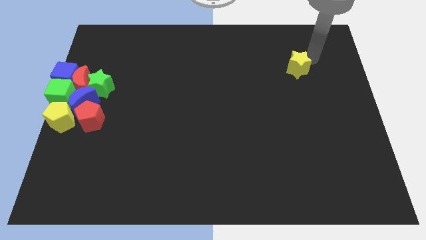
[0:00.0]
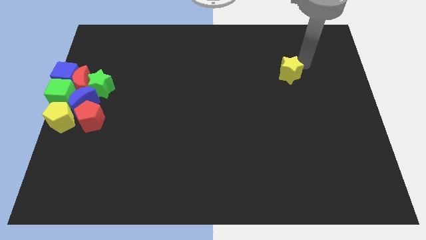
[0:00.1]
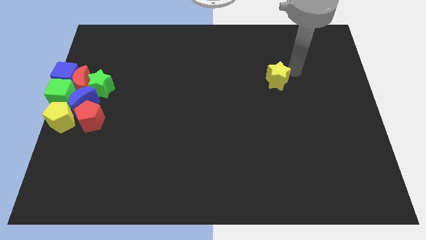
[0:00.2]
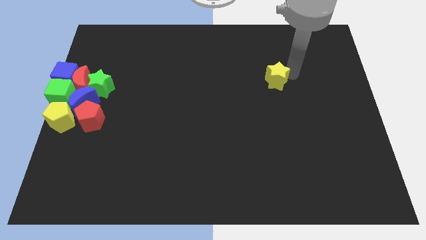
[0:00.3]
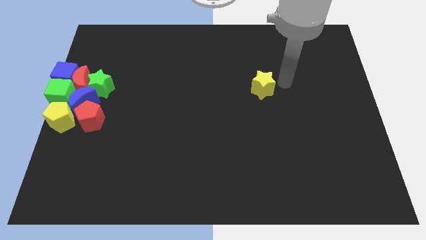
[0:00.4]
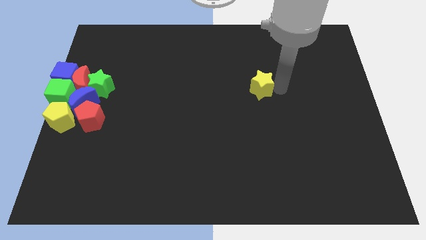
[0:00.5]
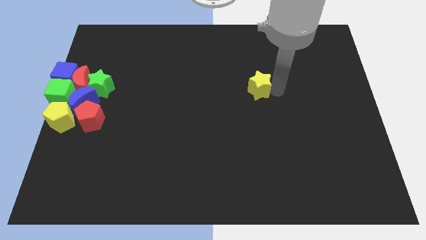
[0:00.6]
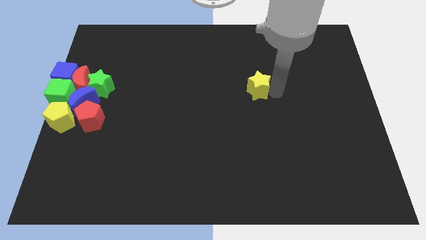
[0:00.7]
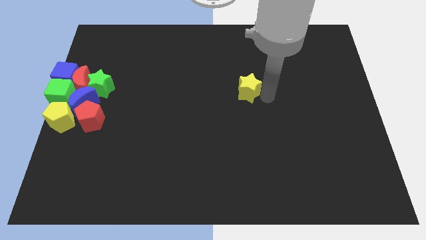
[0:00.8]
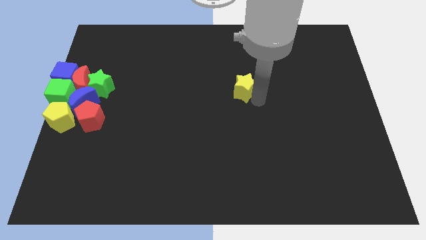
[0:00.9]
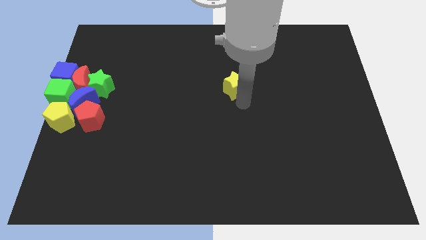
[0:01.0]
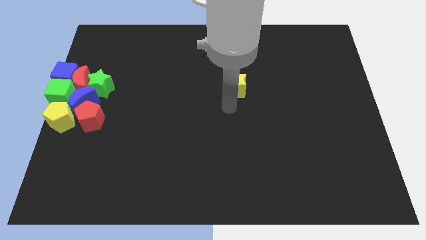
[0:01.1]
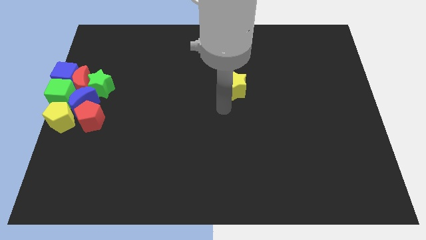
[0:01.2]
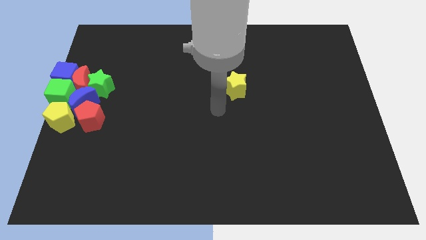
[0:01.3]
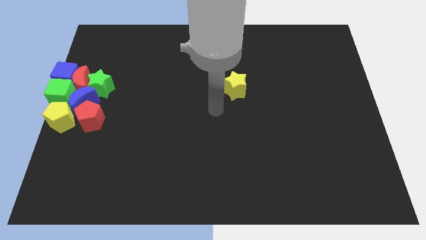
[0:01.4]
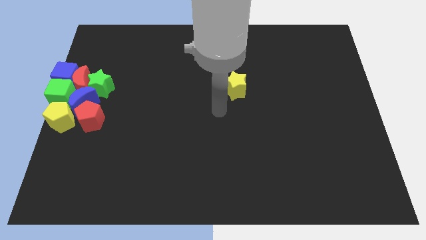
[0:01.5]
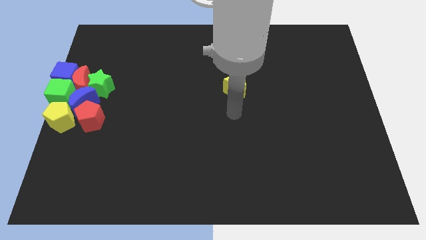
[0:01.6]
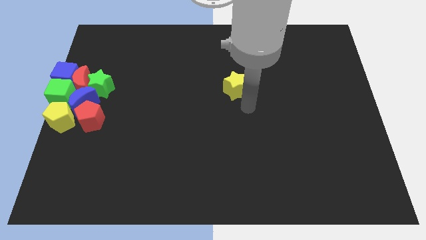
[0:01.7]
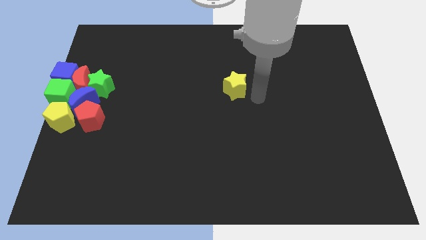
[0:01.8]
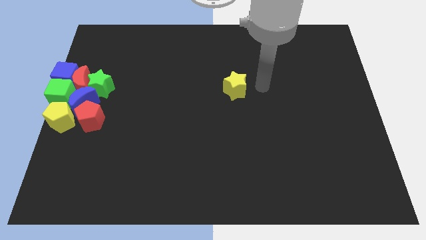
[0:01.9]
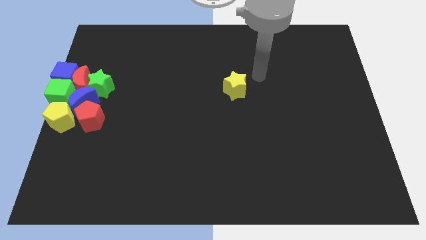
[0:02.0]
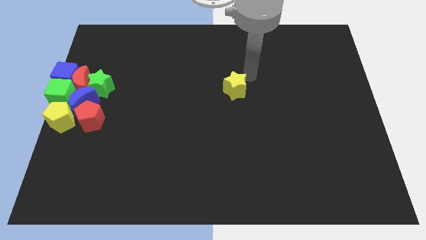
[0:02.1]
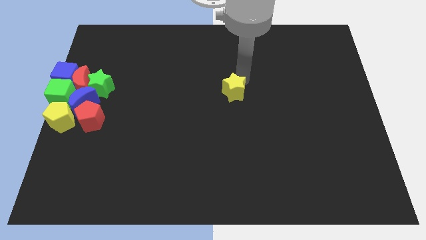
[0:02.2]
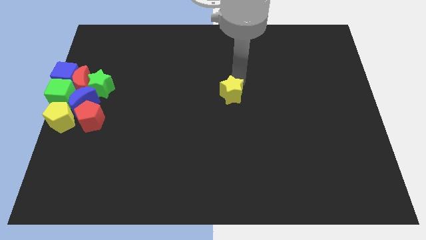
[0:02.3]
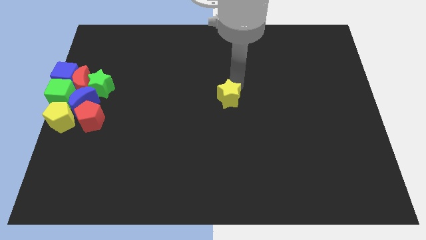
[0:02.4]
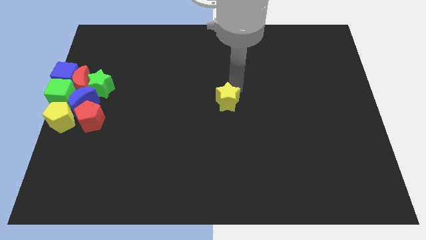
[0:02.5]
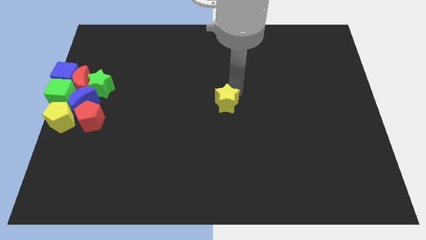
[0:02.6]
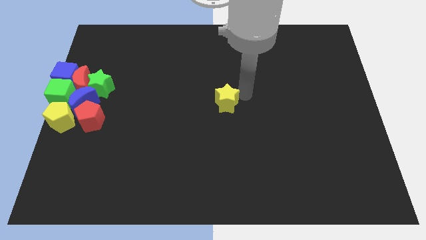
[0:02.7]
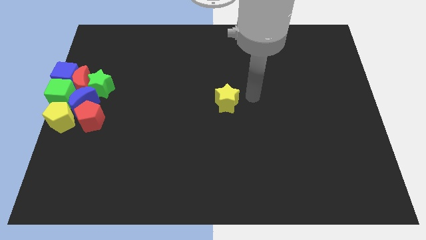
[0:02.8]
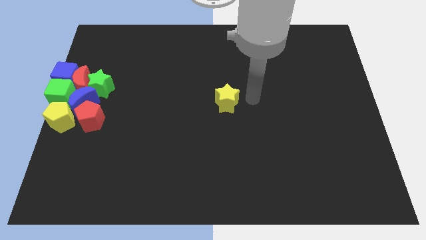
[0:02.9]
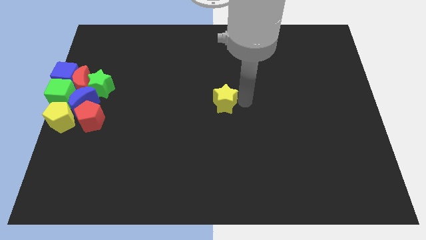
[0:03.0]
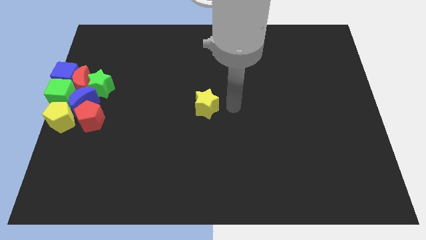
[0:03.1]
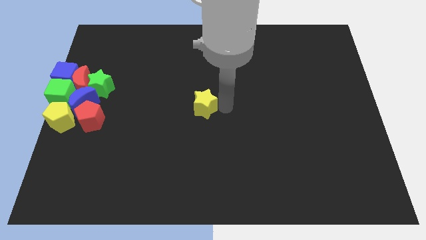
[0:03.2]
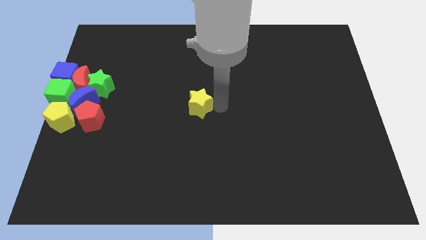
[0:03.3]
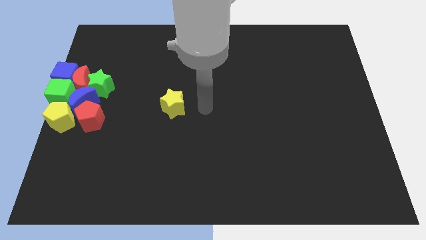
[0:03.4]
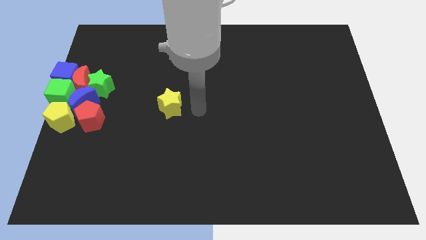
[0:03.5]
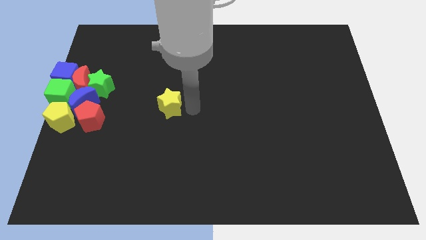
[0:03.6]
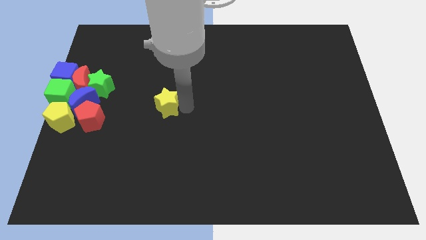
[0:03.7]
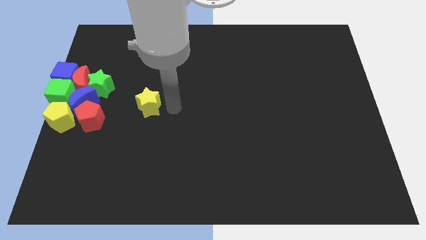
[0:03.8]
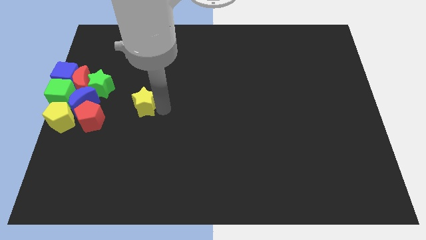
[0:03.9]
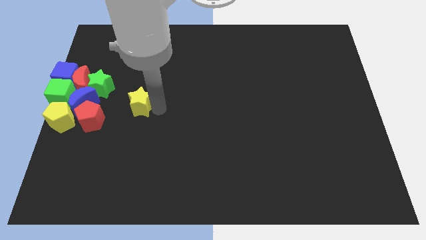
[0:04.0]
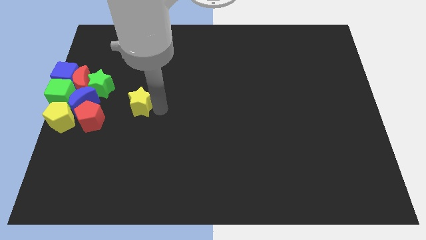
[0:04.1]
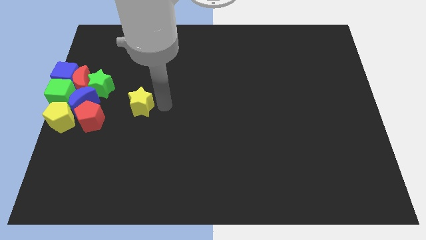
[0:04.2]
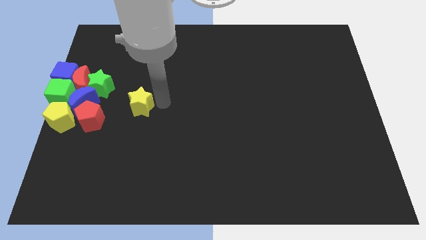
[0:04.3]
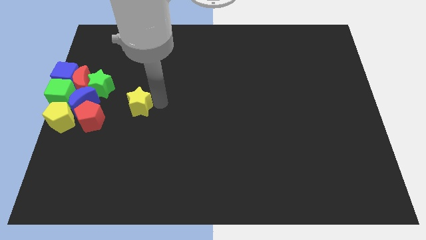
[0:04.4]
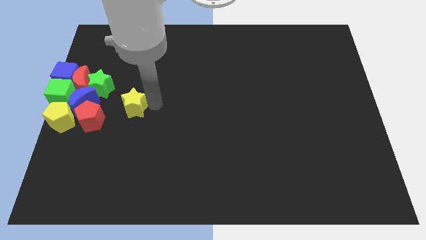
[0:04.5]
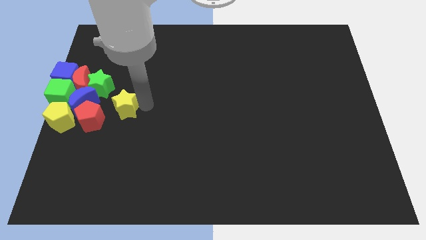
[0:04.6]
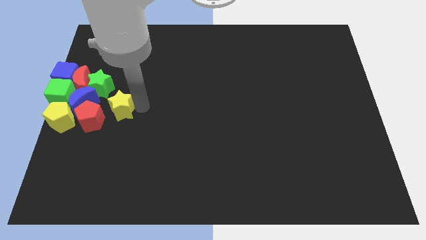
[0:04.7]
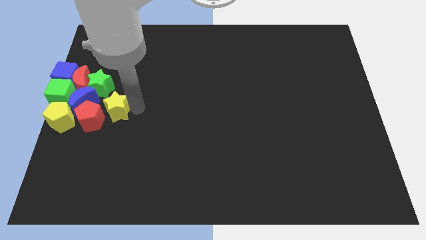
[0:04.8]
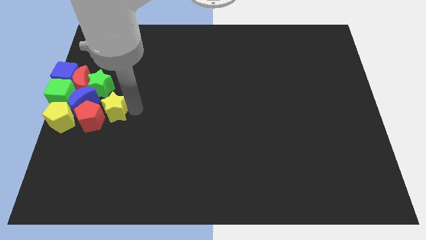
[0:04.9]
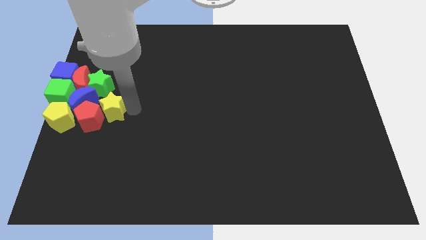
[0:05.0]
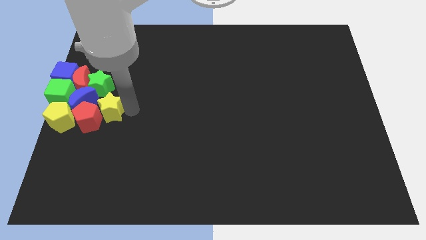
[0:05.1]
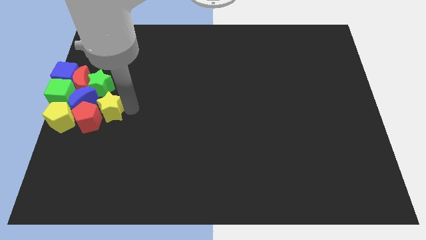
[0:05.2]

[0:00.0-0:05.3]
move the yellow star into the blue moon and red pentagon

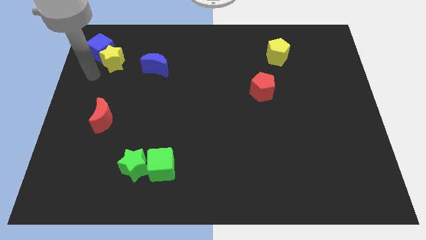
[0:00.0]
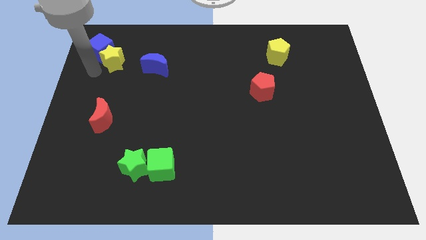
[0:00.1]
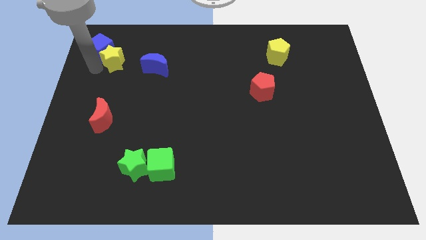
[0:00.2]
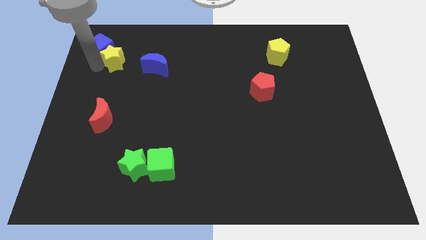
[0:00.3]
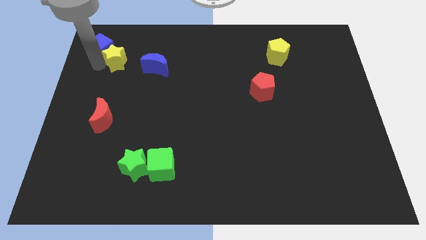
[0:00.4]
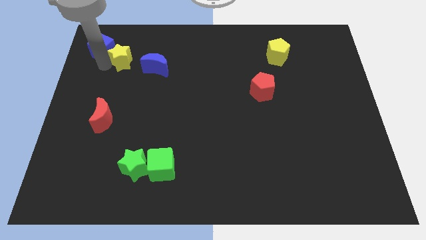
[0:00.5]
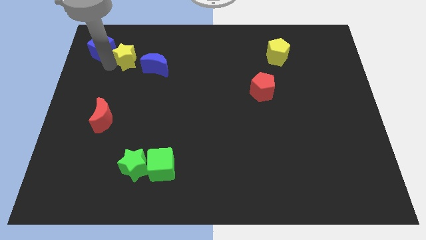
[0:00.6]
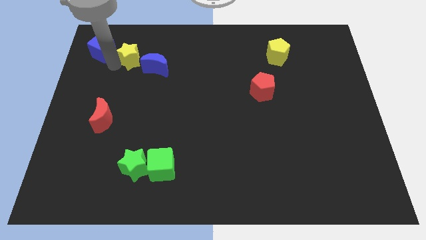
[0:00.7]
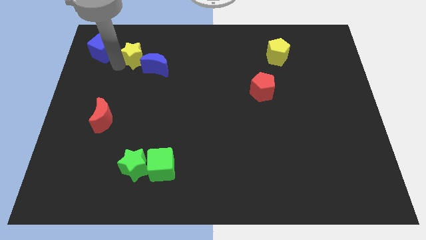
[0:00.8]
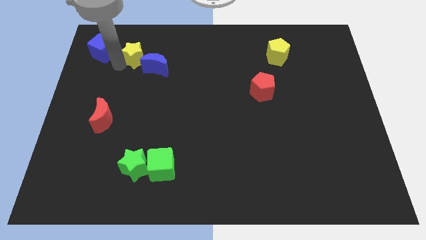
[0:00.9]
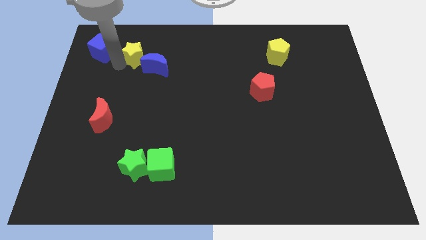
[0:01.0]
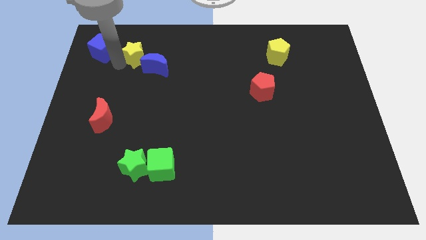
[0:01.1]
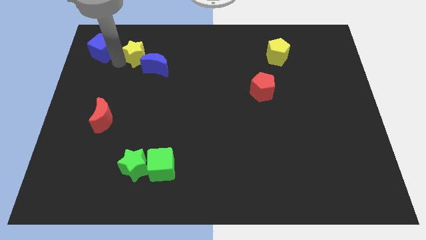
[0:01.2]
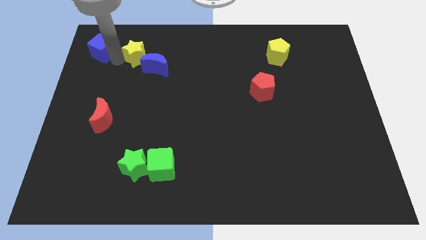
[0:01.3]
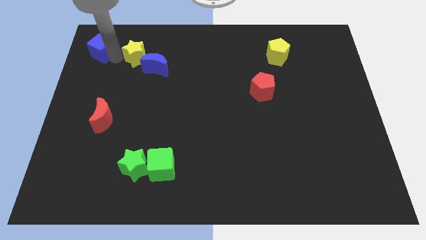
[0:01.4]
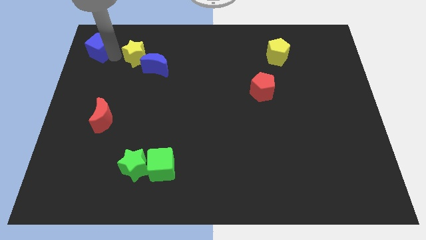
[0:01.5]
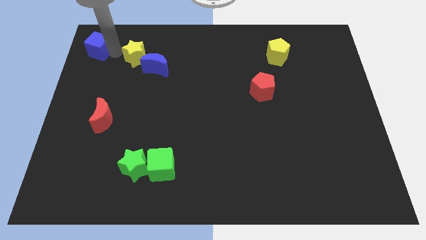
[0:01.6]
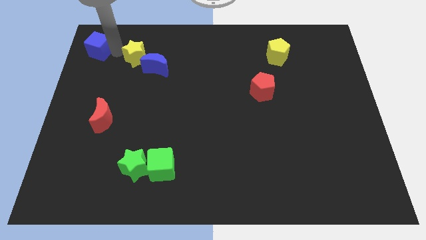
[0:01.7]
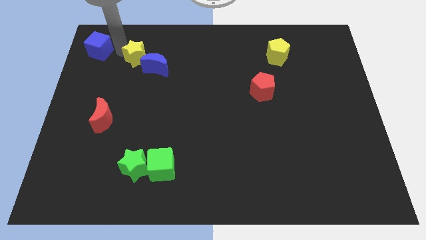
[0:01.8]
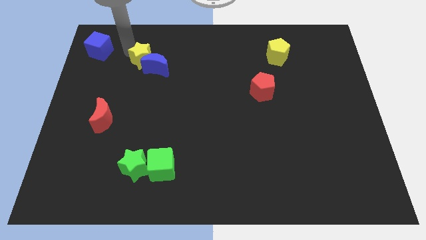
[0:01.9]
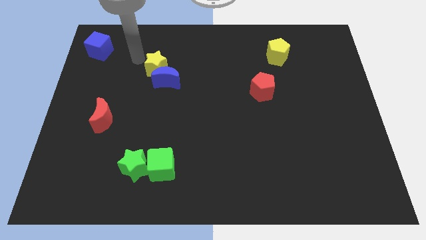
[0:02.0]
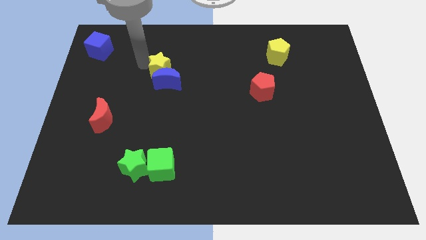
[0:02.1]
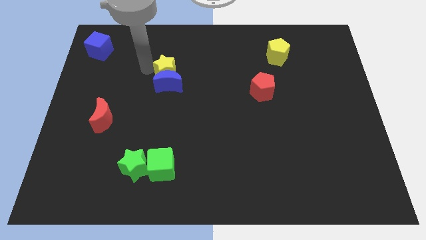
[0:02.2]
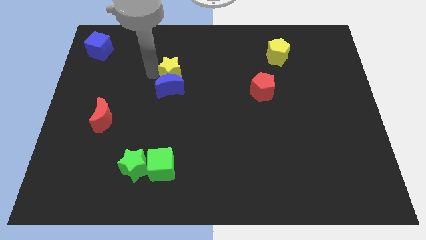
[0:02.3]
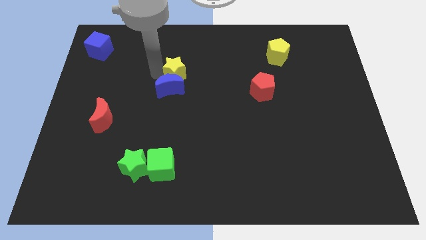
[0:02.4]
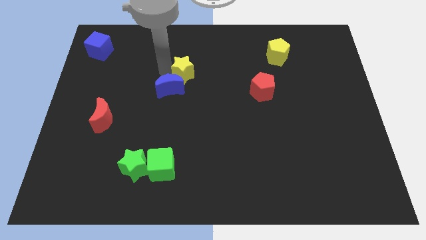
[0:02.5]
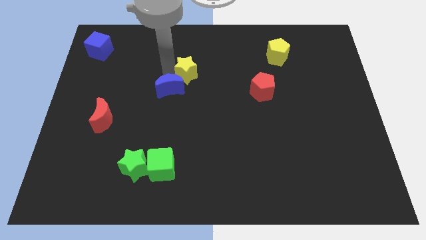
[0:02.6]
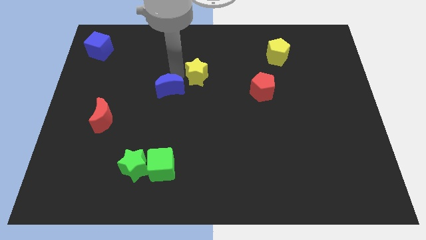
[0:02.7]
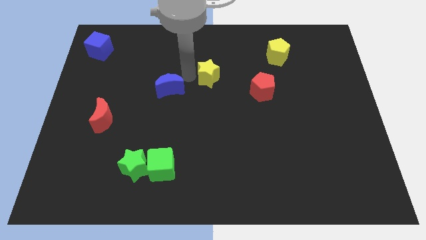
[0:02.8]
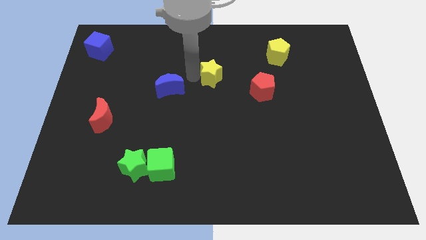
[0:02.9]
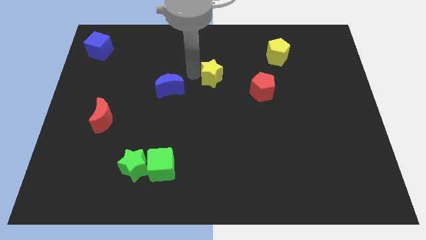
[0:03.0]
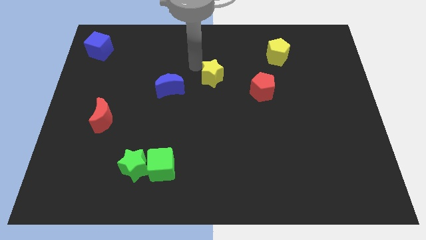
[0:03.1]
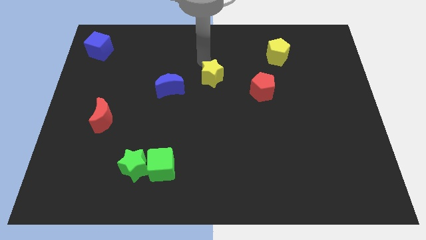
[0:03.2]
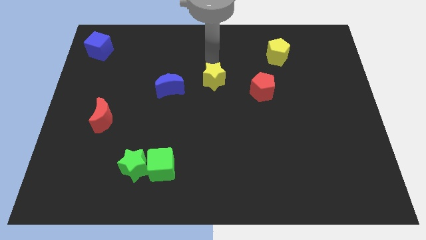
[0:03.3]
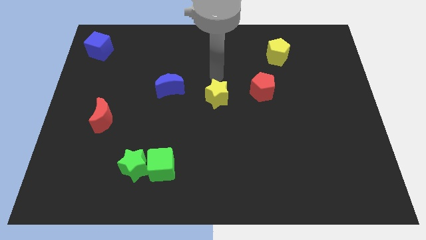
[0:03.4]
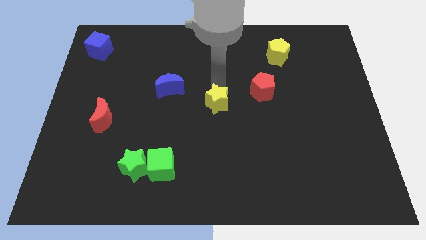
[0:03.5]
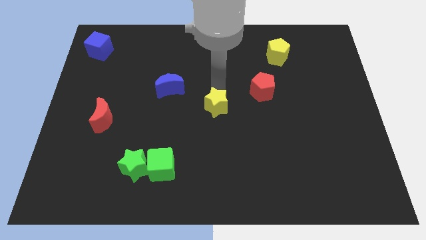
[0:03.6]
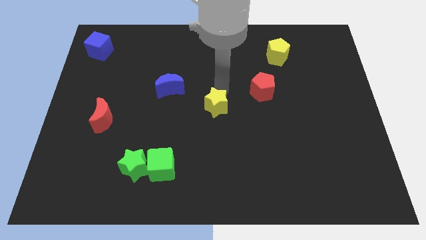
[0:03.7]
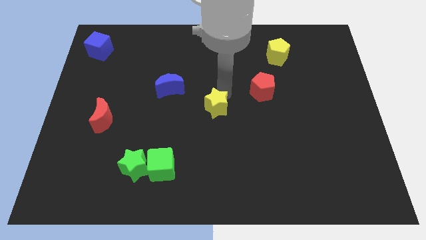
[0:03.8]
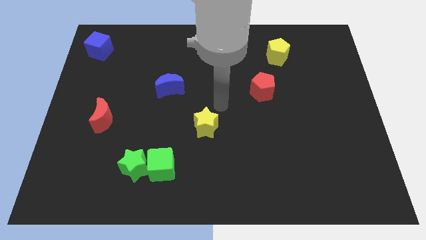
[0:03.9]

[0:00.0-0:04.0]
push the yellow star in the center of the board
